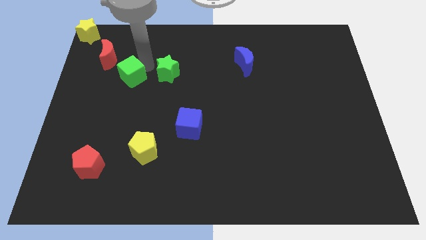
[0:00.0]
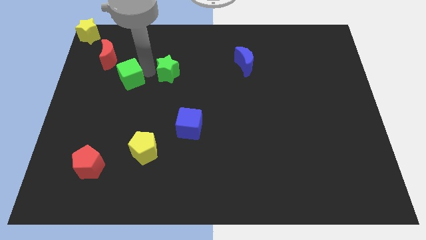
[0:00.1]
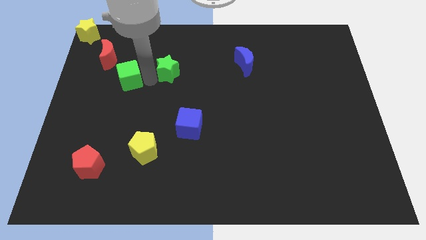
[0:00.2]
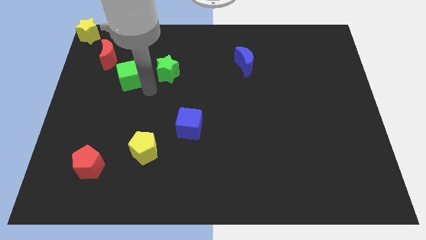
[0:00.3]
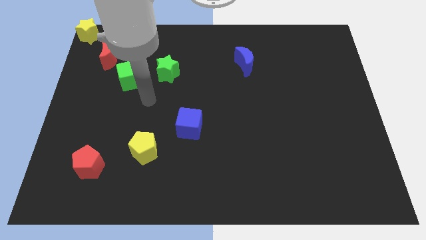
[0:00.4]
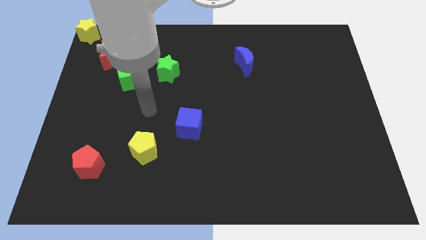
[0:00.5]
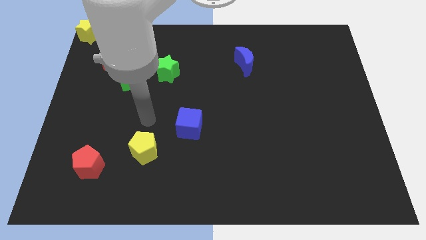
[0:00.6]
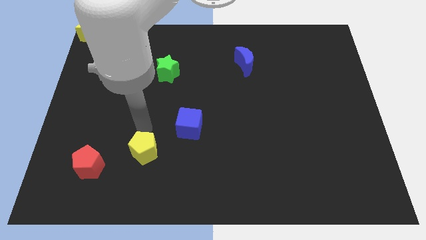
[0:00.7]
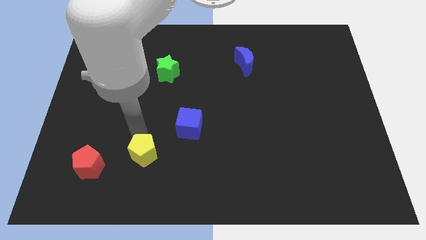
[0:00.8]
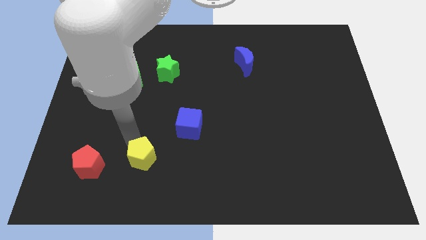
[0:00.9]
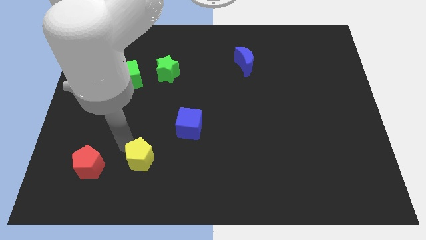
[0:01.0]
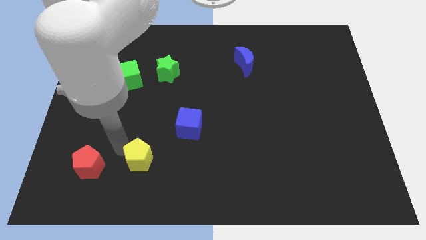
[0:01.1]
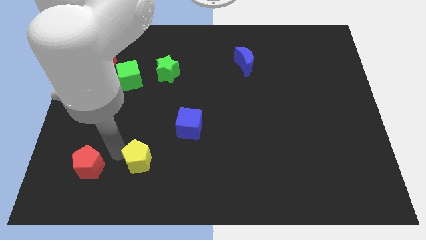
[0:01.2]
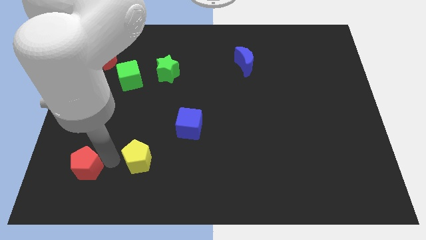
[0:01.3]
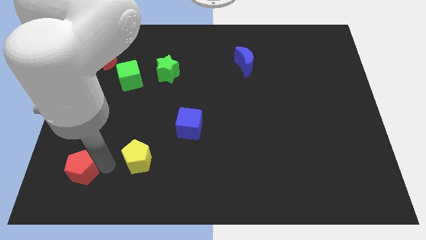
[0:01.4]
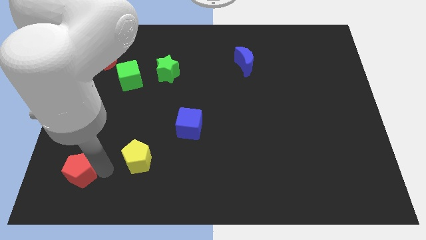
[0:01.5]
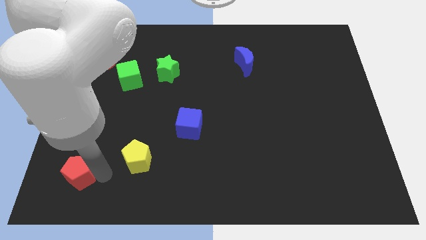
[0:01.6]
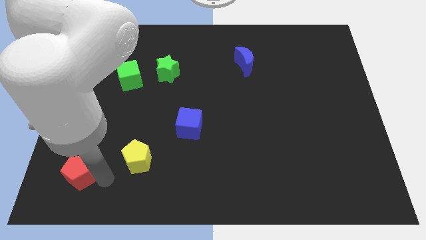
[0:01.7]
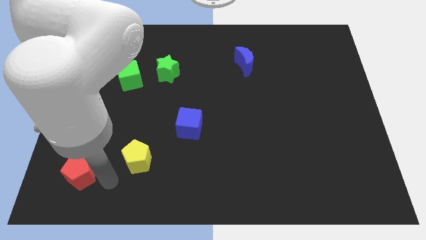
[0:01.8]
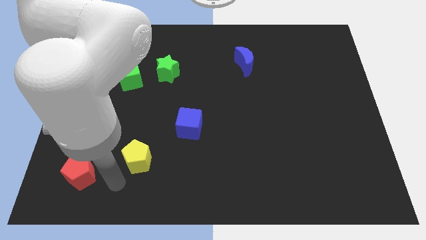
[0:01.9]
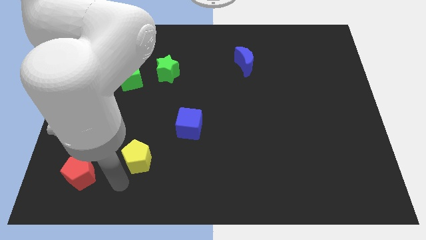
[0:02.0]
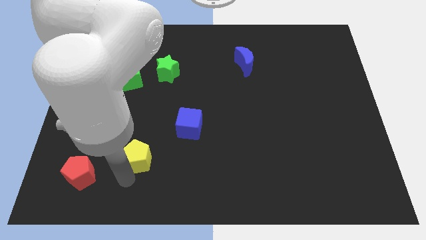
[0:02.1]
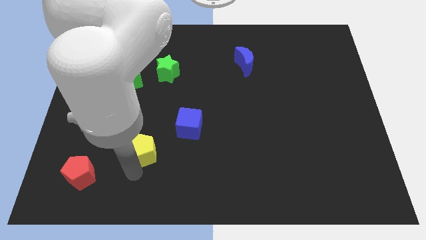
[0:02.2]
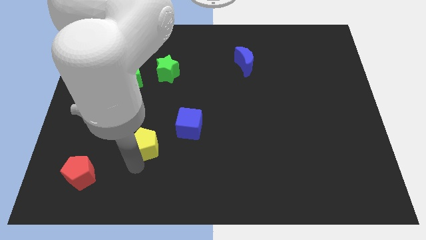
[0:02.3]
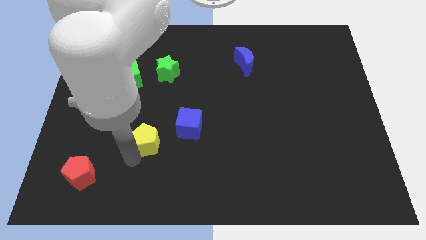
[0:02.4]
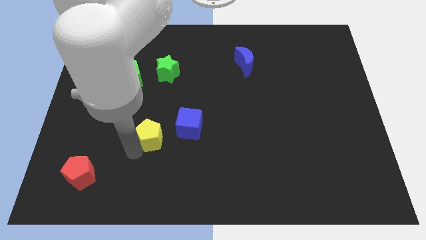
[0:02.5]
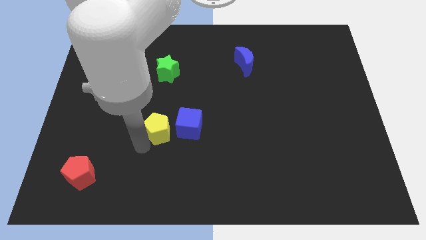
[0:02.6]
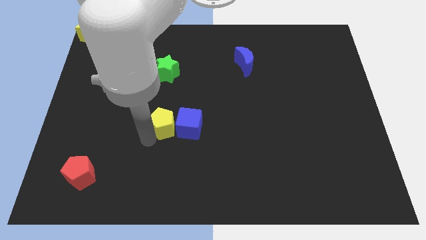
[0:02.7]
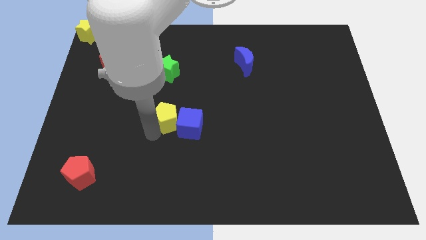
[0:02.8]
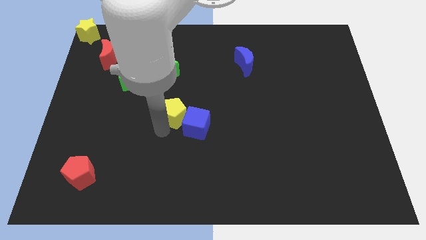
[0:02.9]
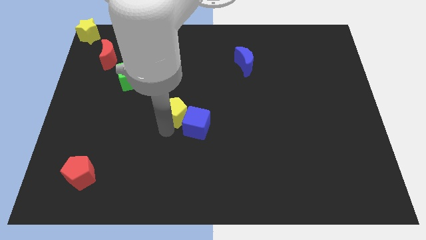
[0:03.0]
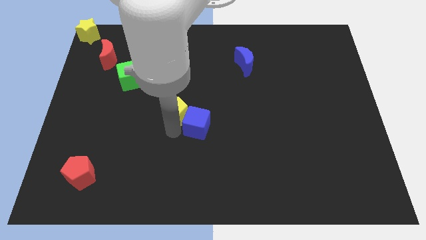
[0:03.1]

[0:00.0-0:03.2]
slide the yellow pentagon into the left side of the blue cube

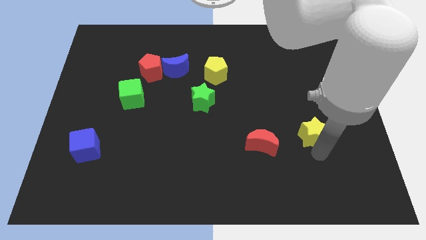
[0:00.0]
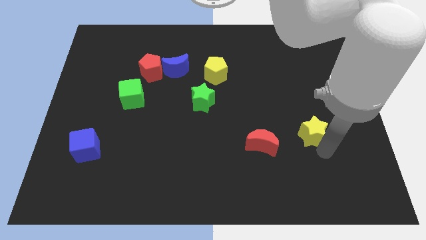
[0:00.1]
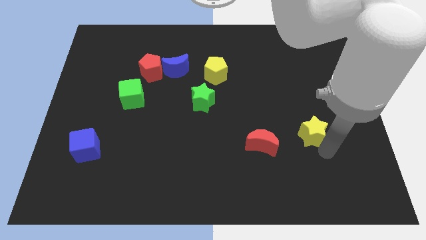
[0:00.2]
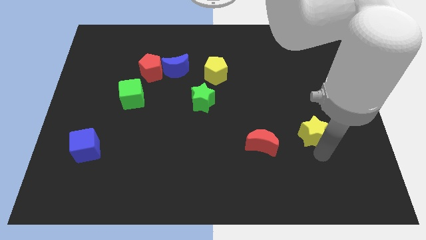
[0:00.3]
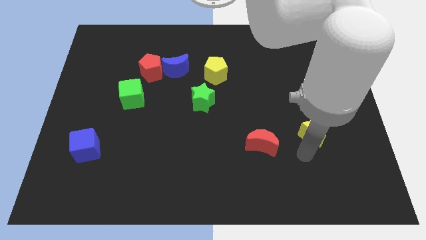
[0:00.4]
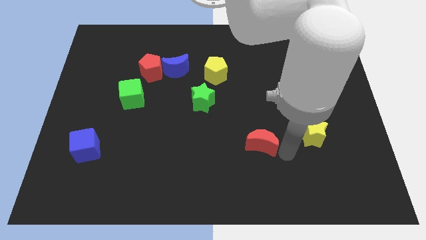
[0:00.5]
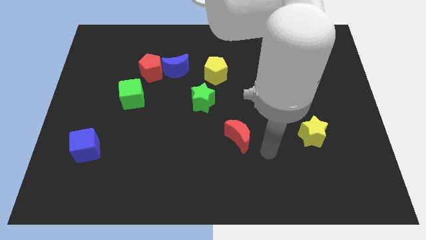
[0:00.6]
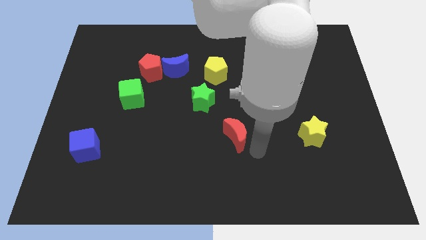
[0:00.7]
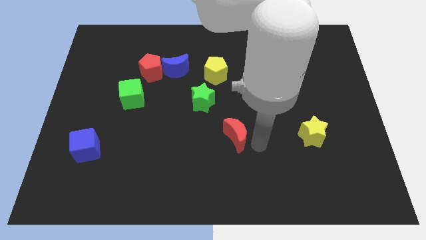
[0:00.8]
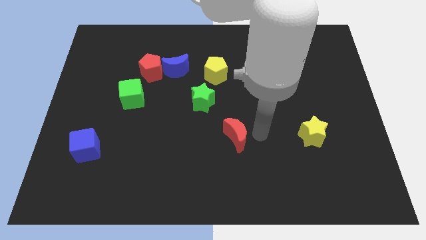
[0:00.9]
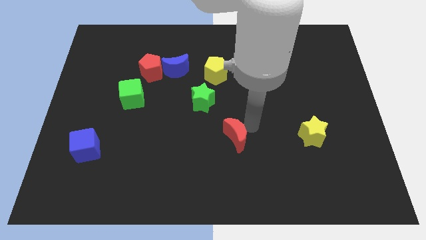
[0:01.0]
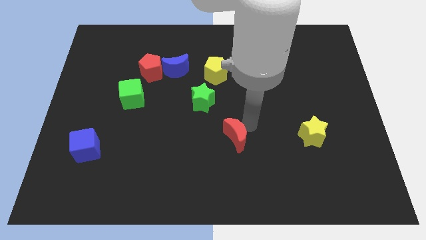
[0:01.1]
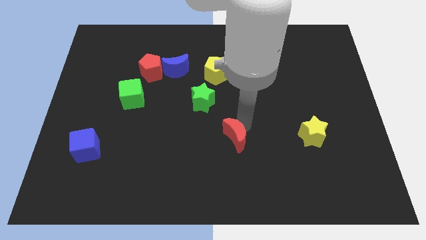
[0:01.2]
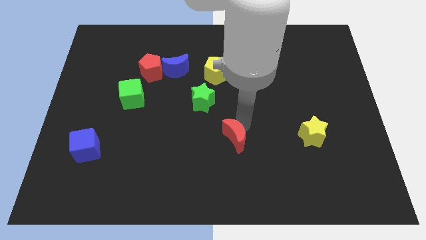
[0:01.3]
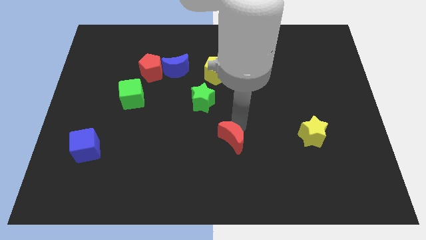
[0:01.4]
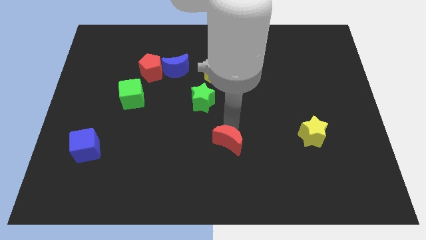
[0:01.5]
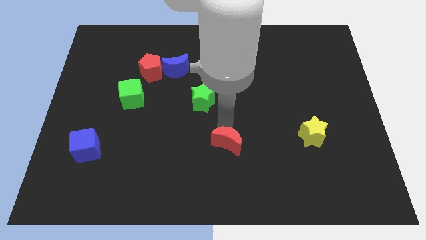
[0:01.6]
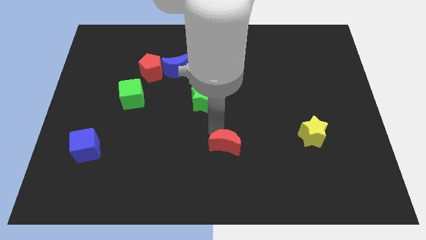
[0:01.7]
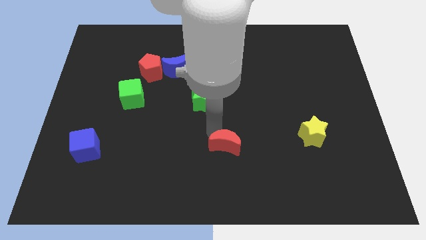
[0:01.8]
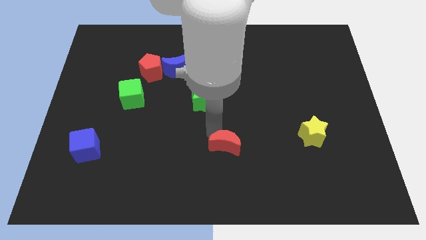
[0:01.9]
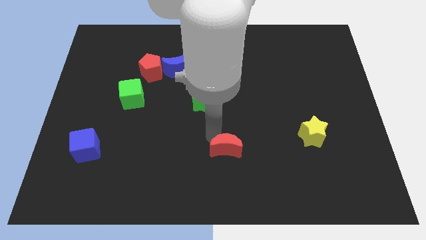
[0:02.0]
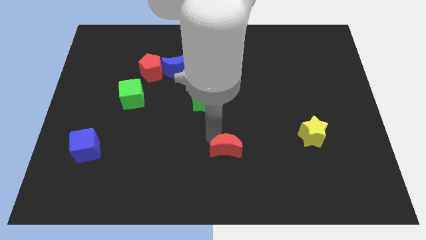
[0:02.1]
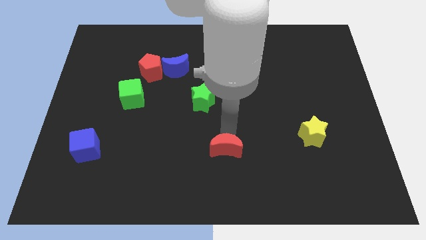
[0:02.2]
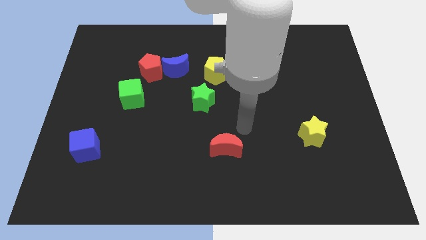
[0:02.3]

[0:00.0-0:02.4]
place red crescent below yellow pentagon

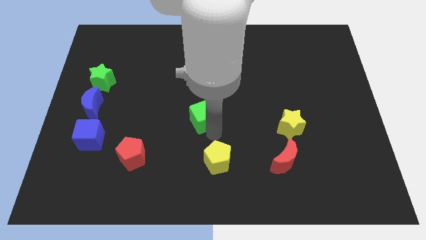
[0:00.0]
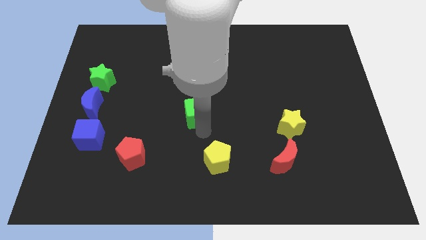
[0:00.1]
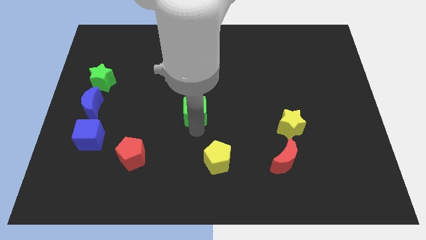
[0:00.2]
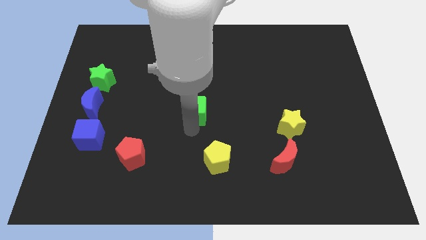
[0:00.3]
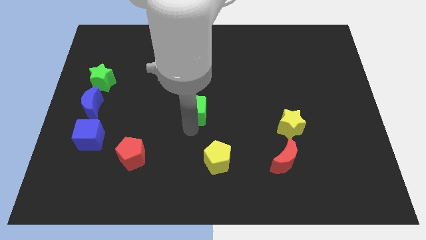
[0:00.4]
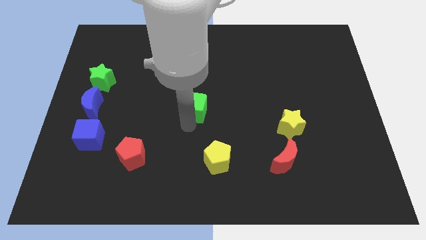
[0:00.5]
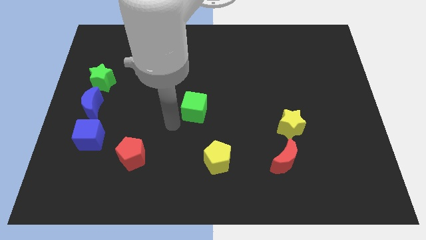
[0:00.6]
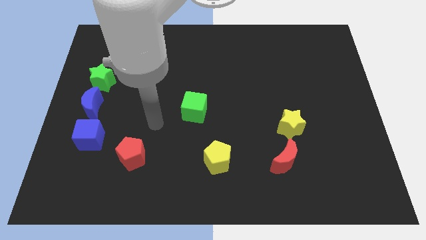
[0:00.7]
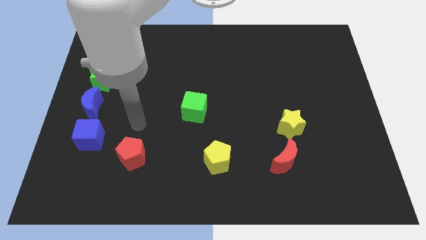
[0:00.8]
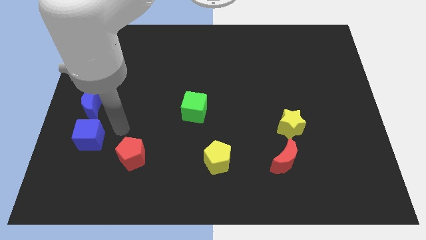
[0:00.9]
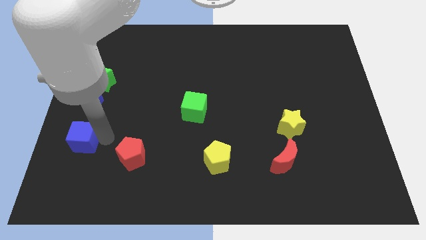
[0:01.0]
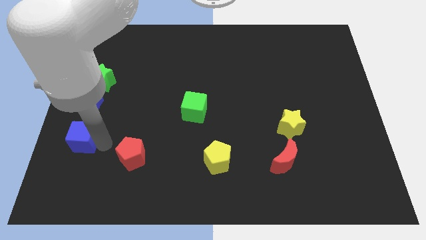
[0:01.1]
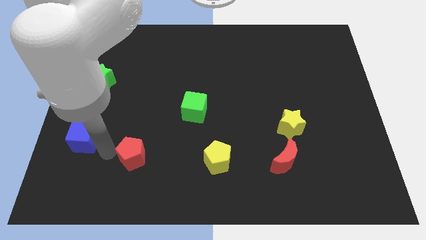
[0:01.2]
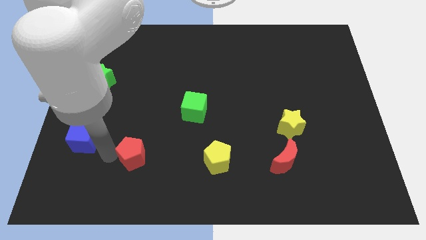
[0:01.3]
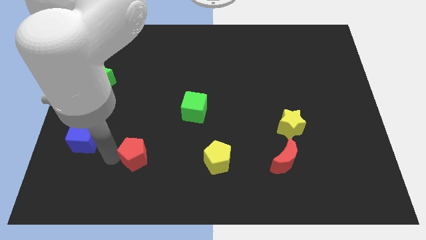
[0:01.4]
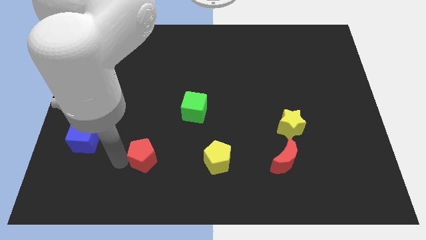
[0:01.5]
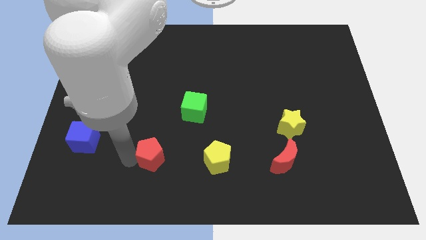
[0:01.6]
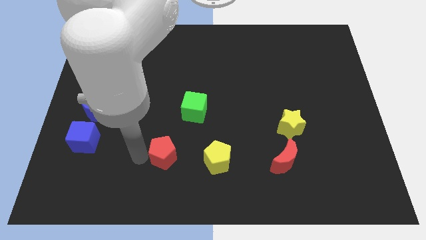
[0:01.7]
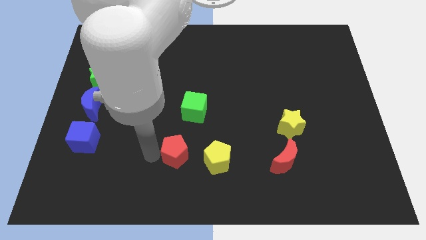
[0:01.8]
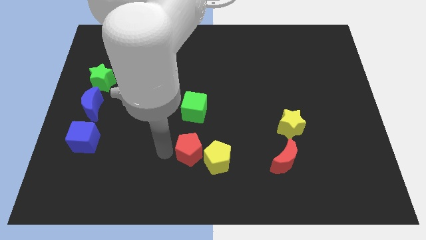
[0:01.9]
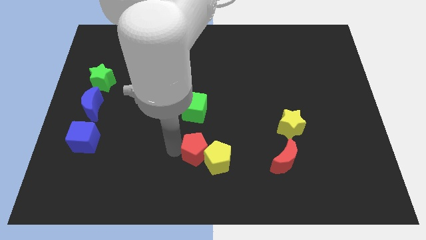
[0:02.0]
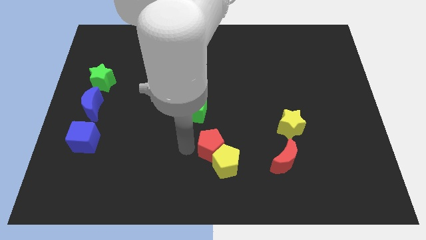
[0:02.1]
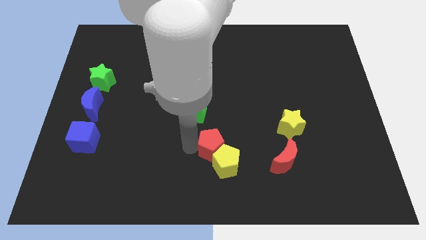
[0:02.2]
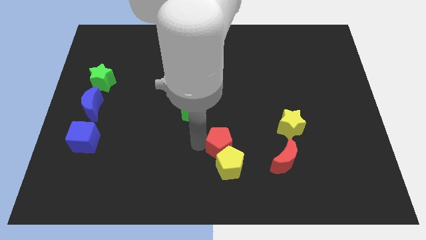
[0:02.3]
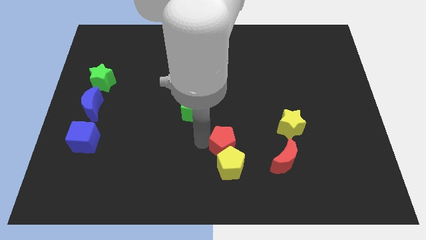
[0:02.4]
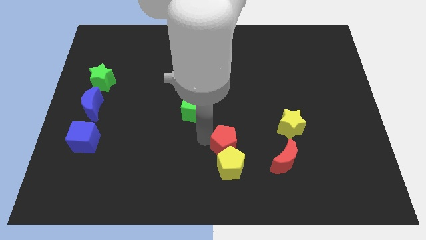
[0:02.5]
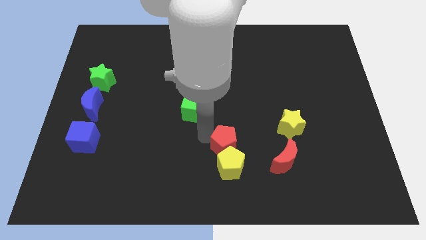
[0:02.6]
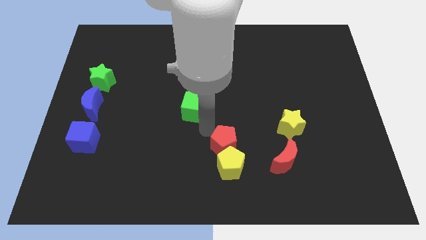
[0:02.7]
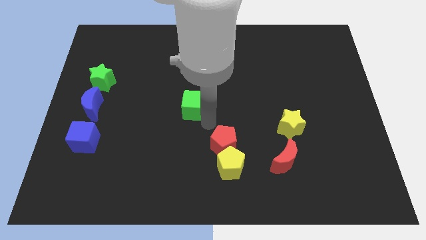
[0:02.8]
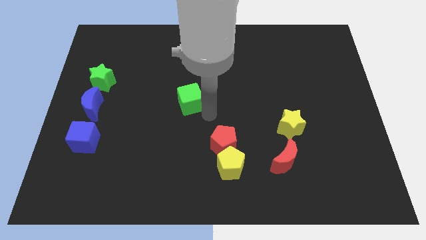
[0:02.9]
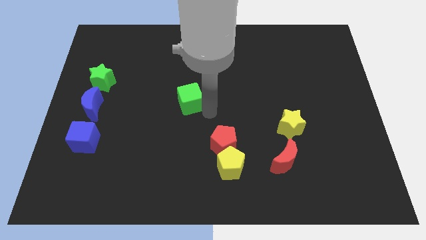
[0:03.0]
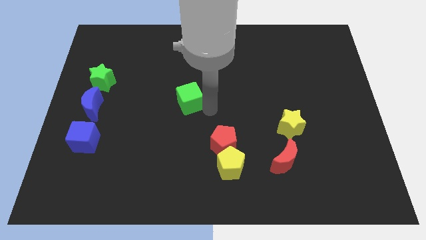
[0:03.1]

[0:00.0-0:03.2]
push the red pentagon into the yellow pentagon
